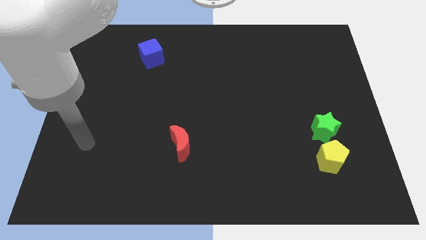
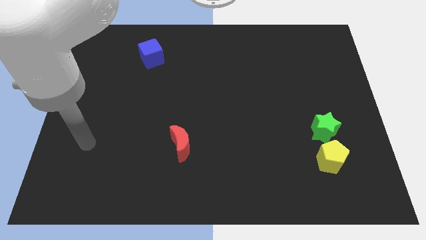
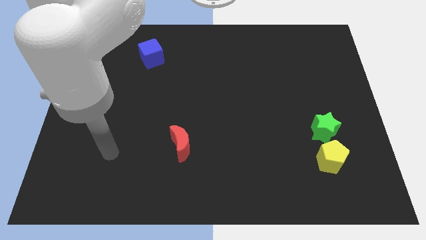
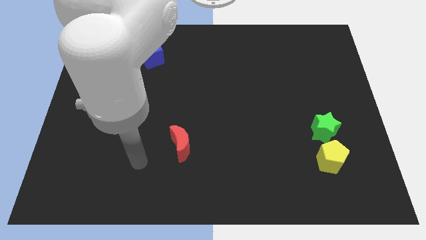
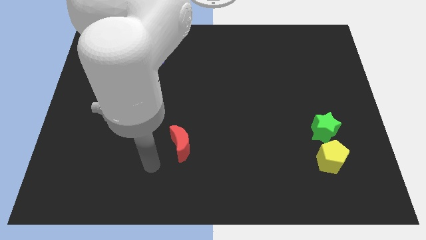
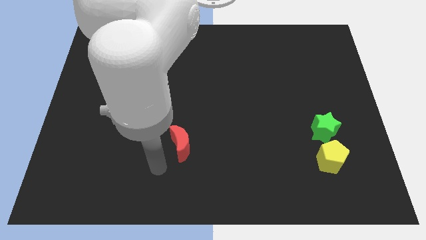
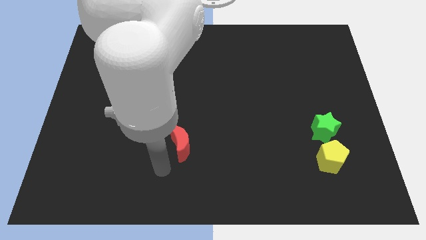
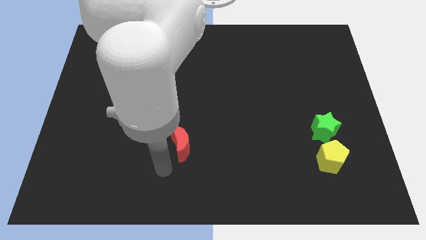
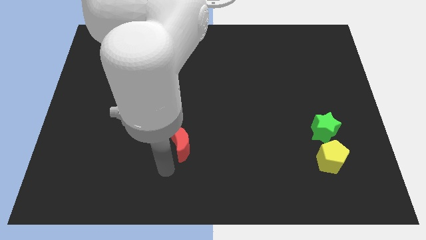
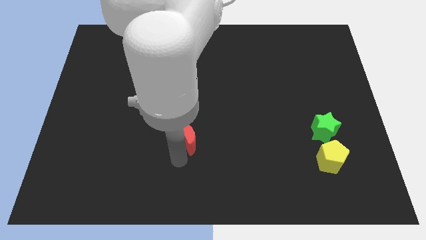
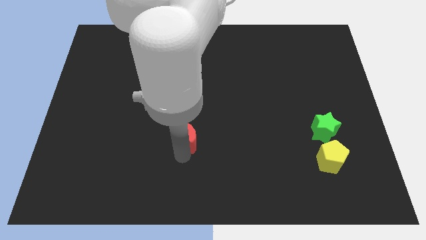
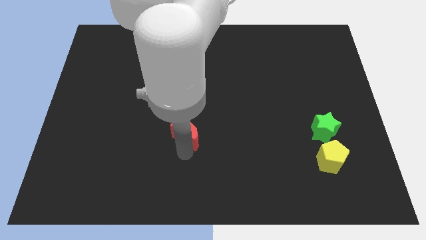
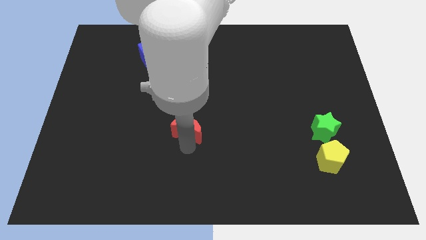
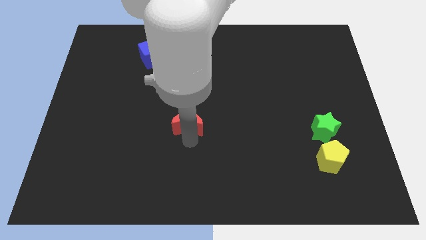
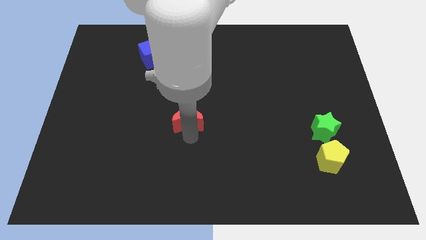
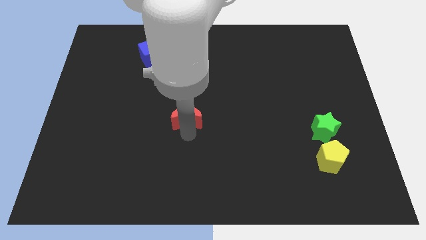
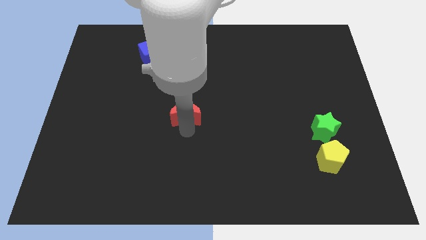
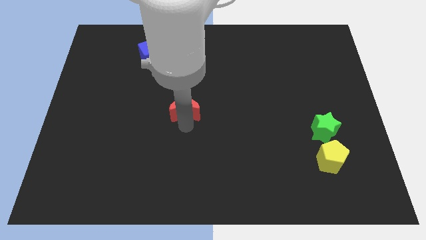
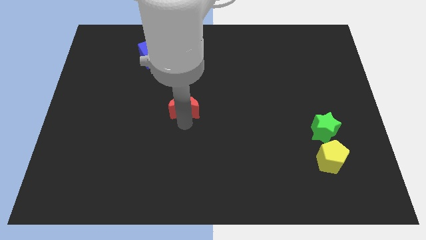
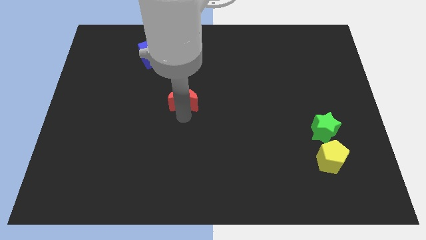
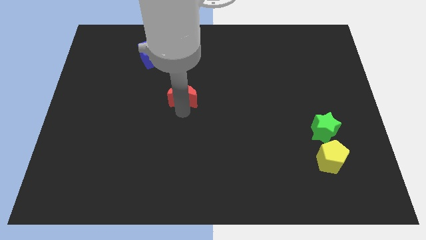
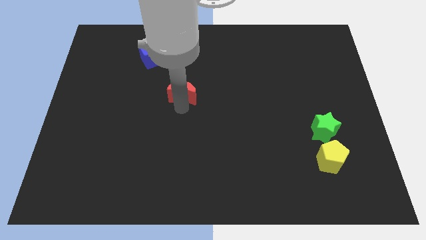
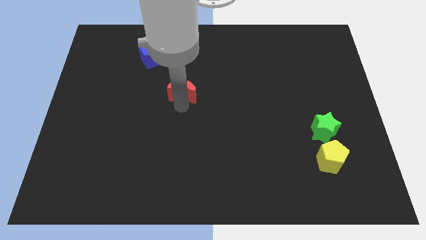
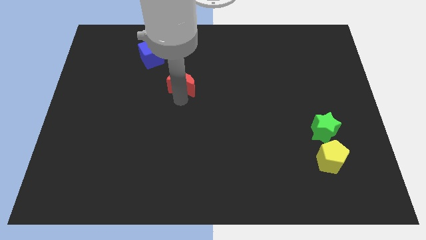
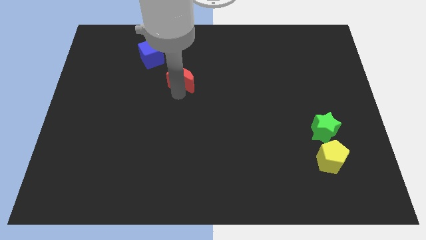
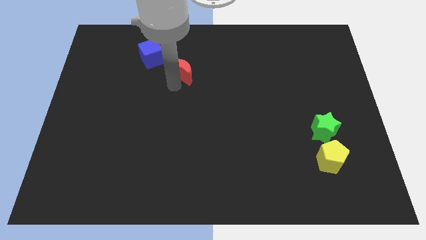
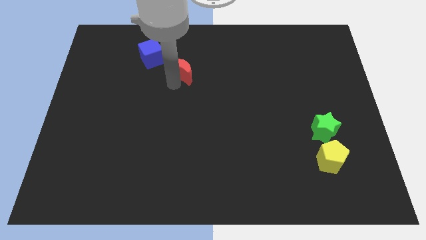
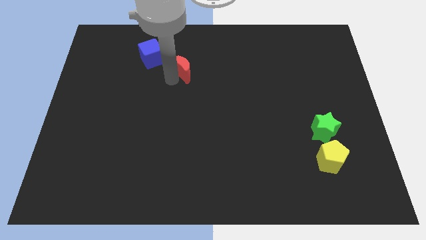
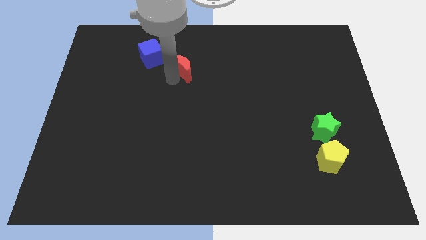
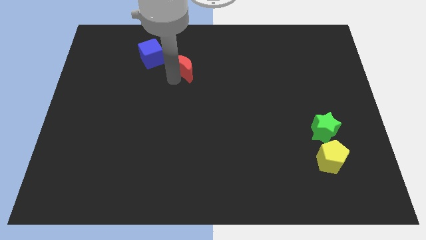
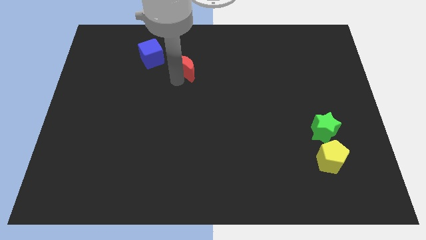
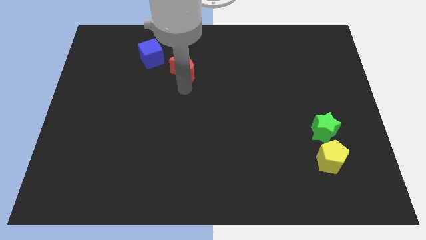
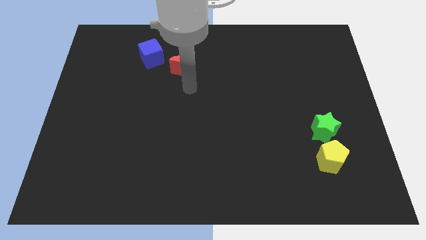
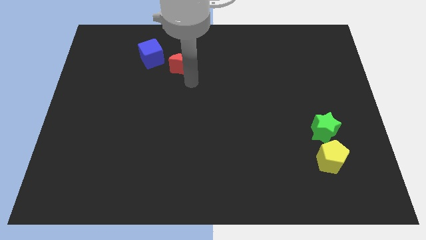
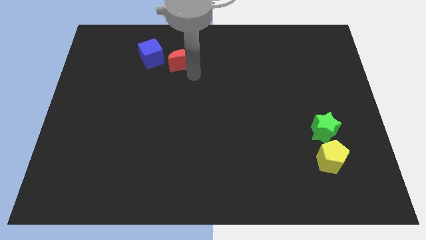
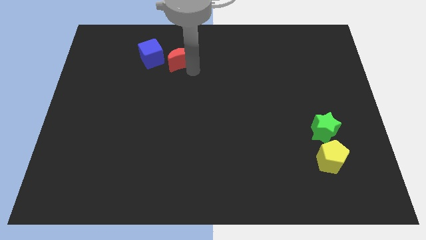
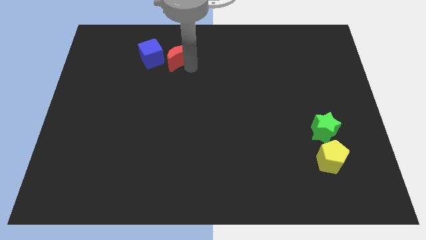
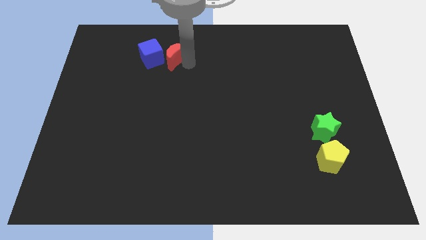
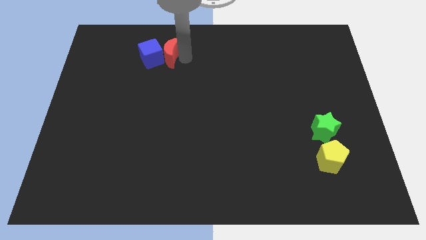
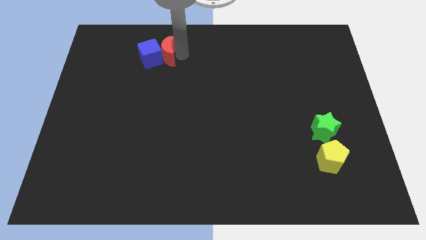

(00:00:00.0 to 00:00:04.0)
move the moon to the blue block

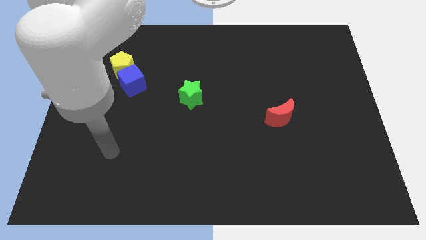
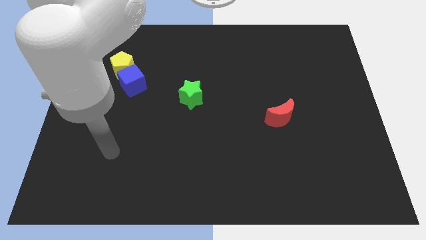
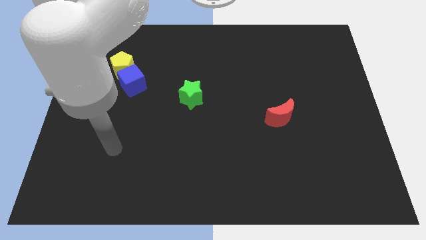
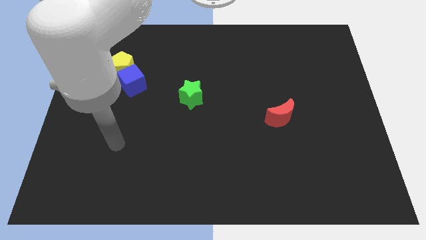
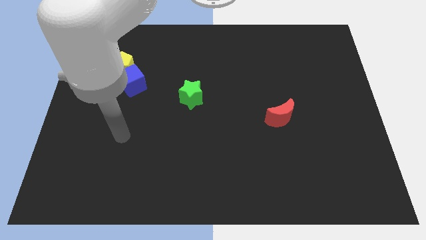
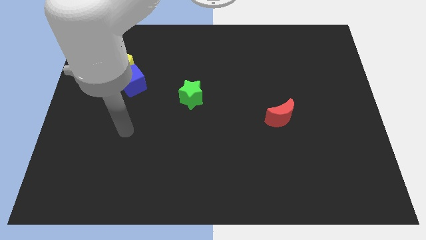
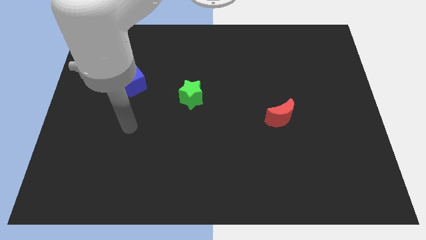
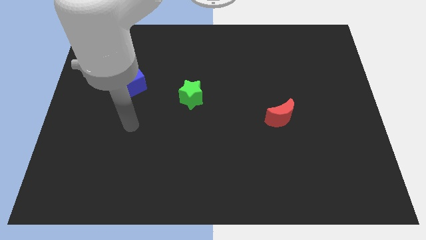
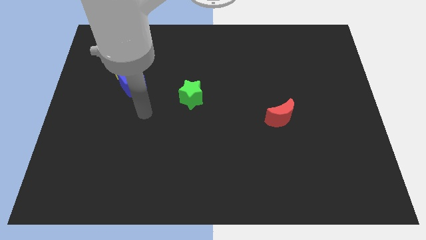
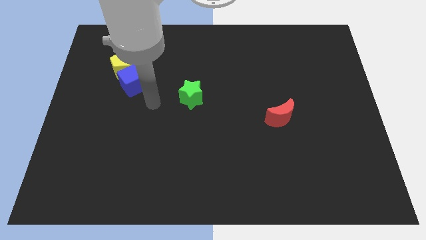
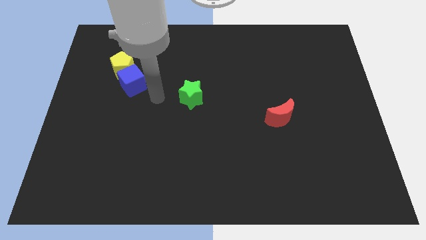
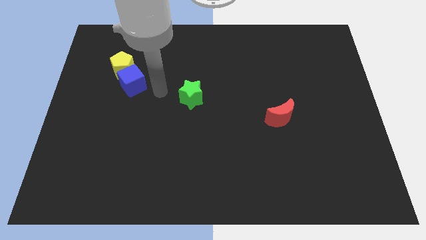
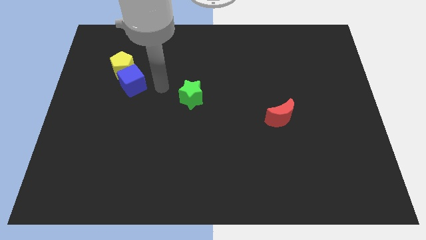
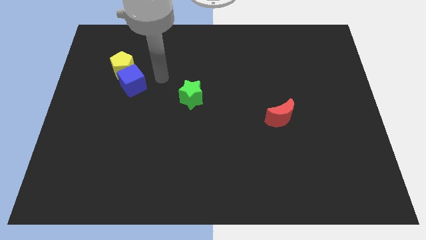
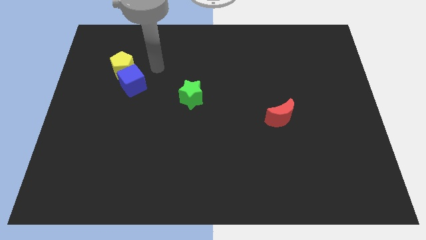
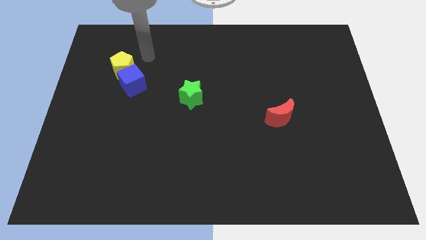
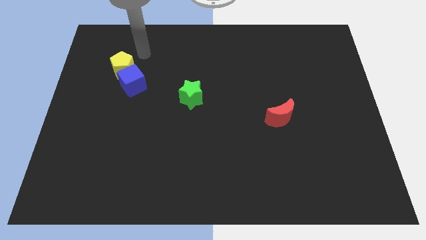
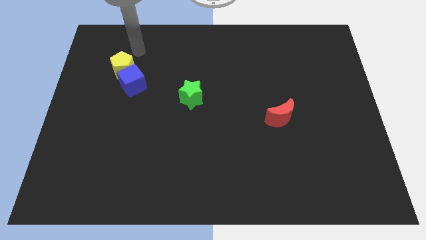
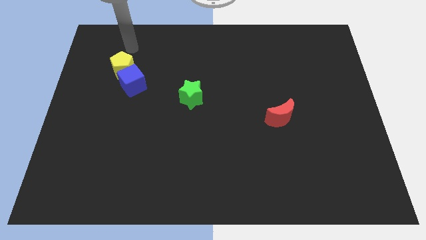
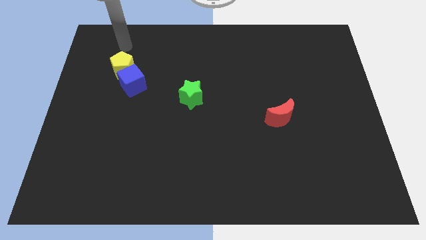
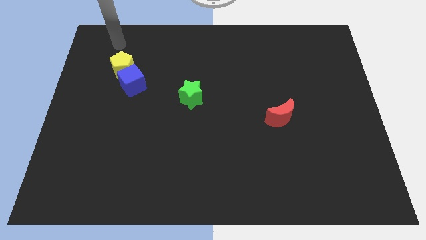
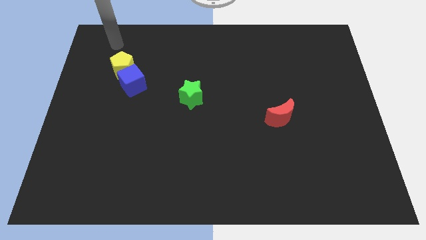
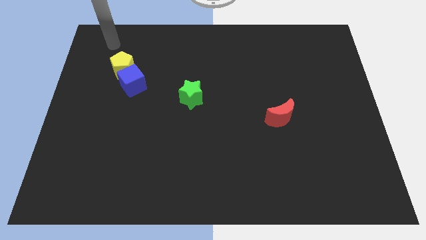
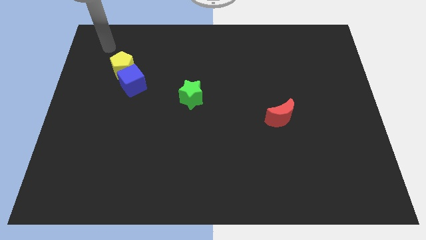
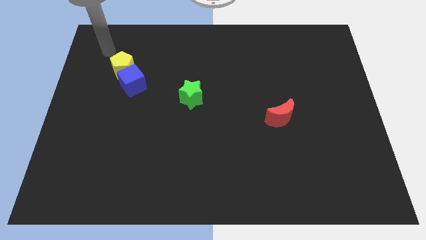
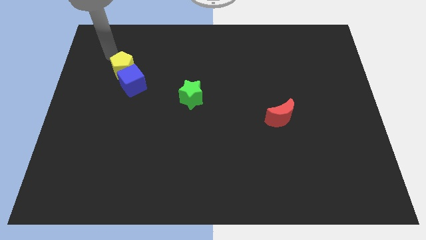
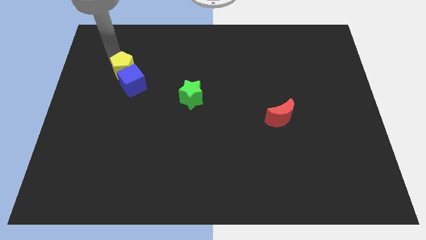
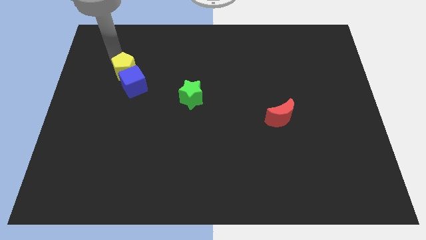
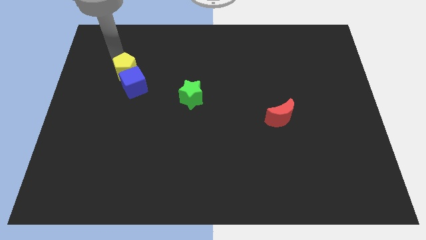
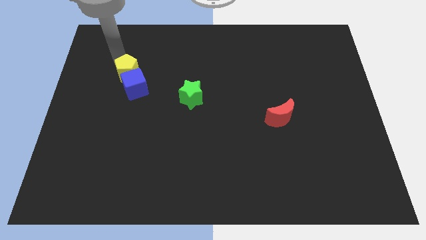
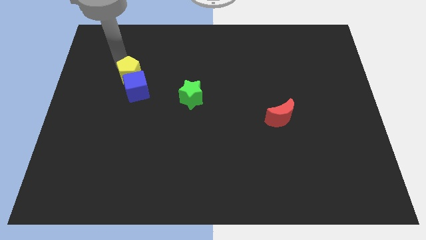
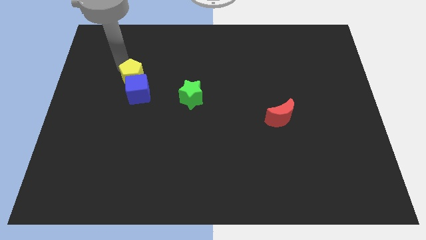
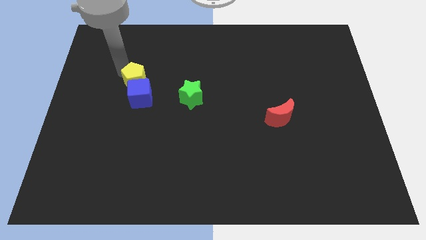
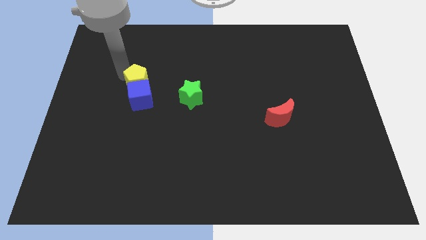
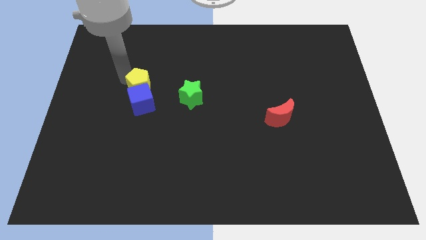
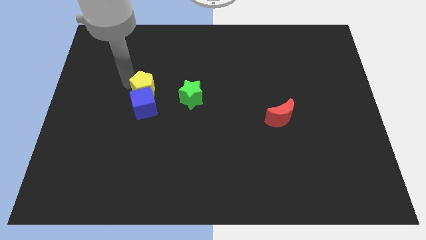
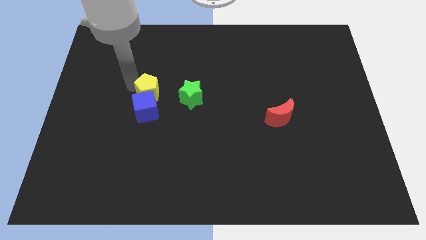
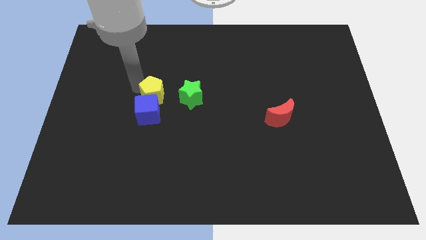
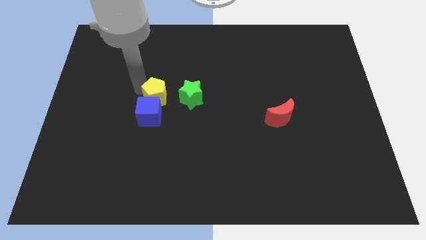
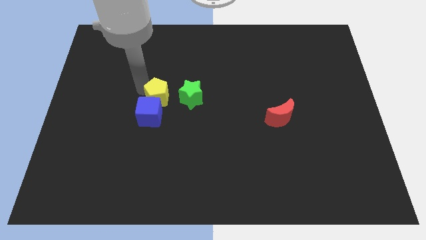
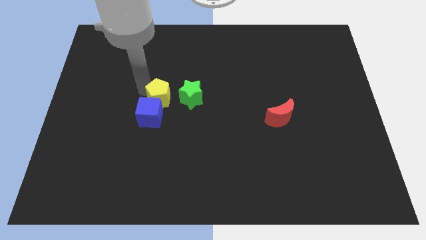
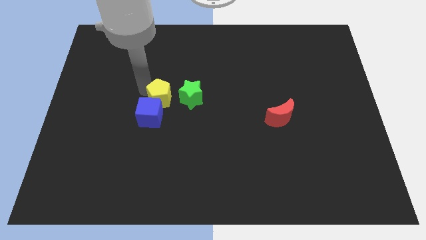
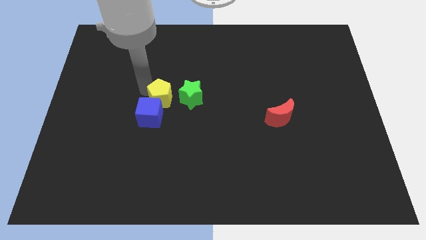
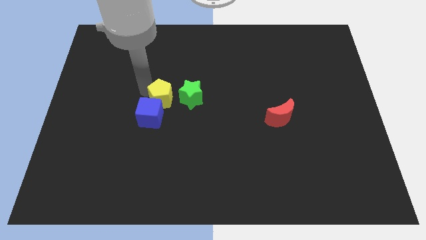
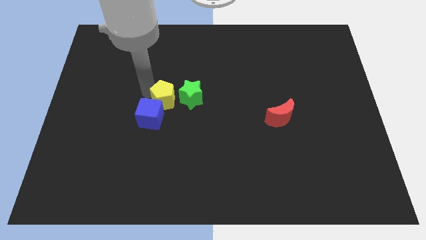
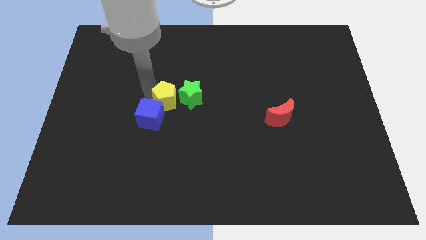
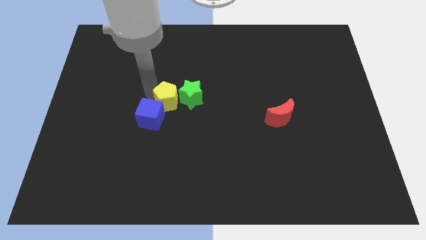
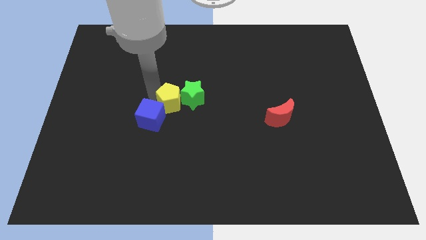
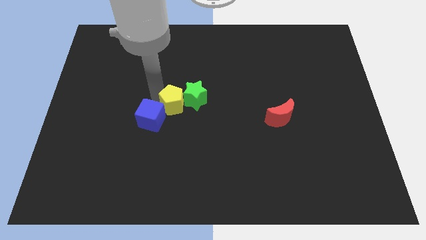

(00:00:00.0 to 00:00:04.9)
put the yellow block close to the green block
